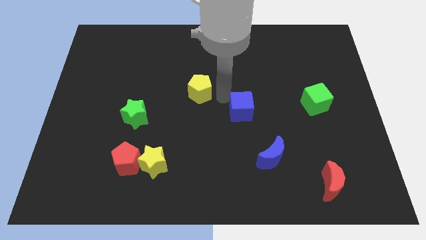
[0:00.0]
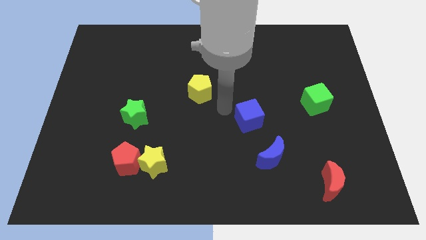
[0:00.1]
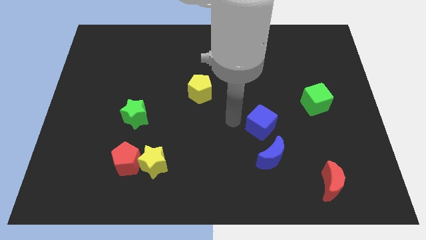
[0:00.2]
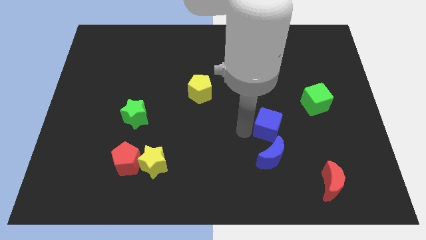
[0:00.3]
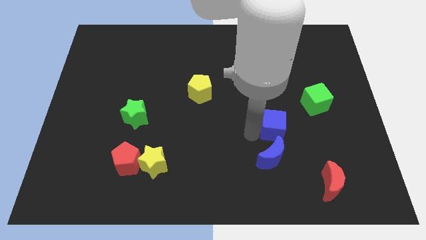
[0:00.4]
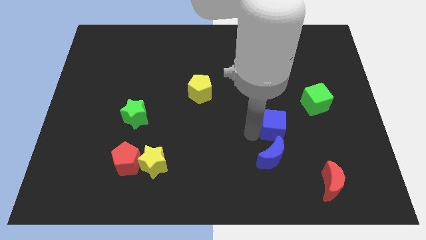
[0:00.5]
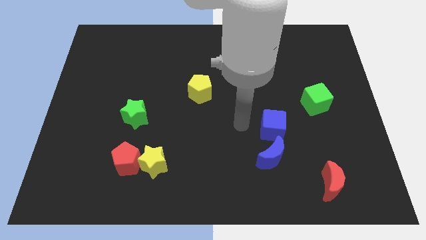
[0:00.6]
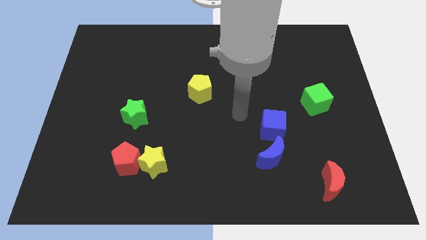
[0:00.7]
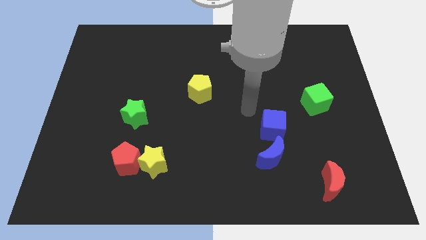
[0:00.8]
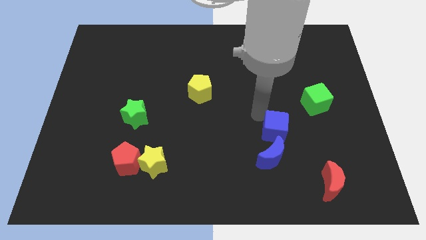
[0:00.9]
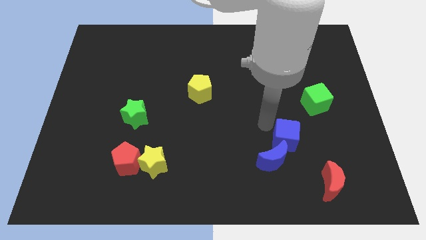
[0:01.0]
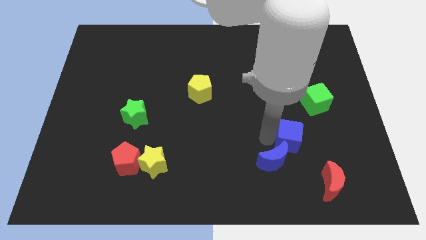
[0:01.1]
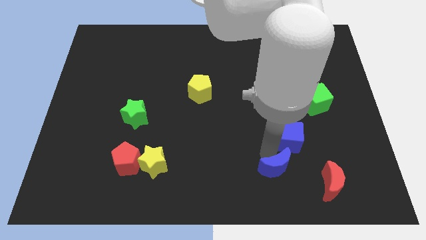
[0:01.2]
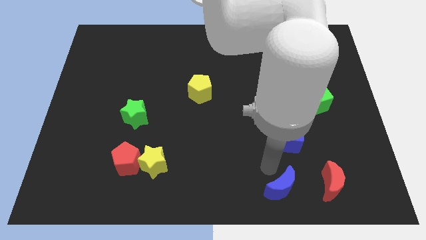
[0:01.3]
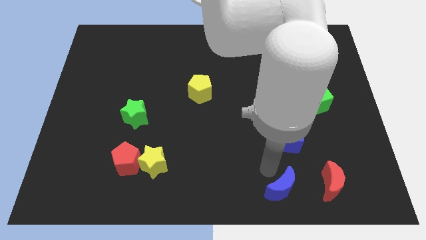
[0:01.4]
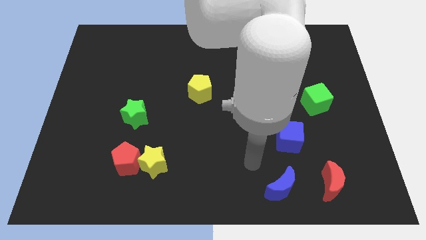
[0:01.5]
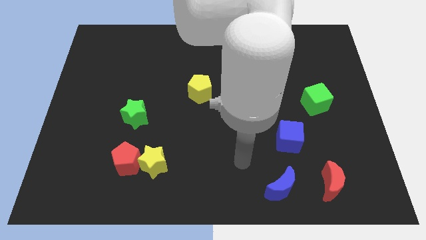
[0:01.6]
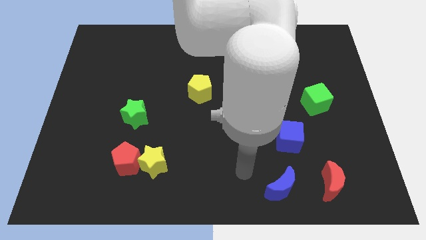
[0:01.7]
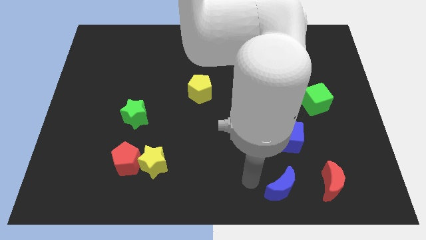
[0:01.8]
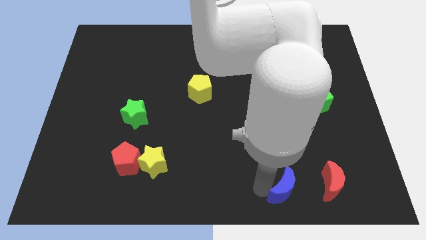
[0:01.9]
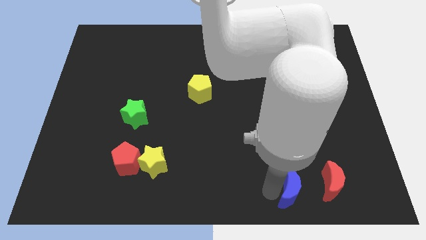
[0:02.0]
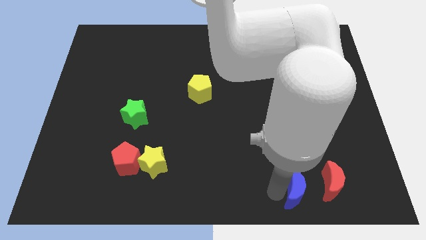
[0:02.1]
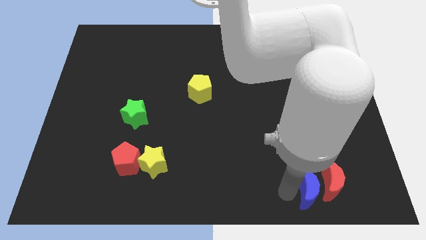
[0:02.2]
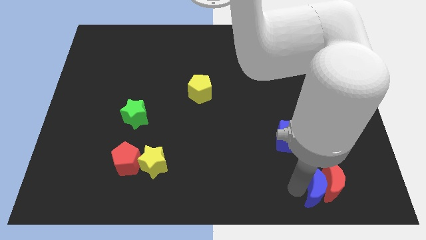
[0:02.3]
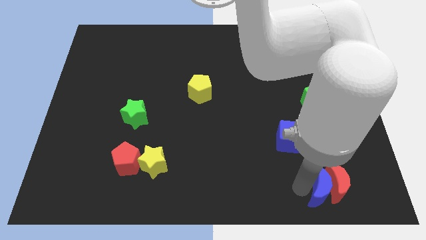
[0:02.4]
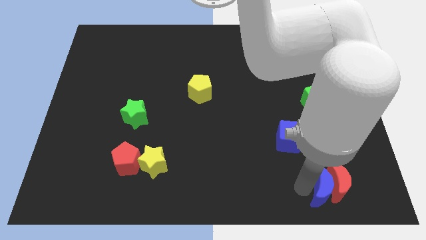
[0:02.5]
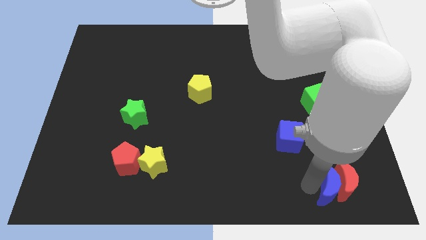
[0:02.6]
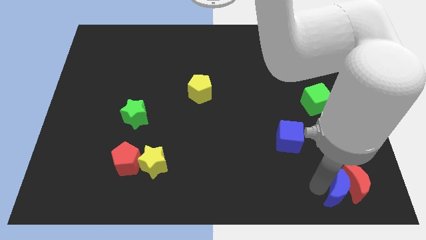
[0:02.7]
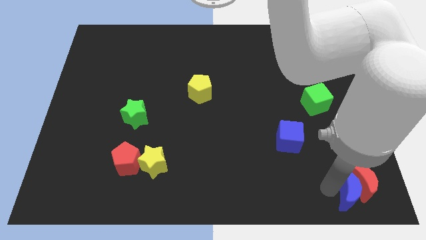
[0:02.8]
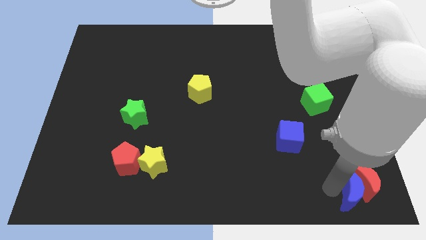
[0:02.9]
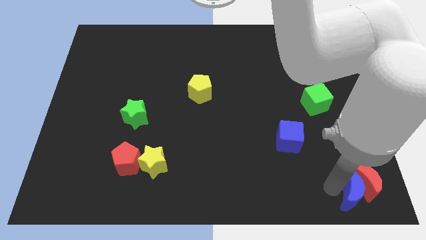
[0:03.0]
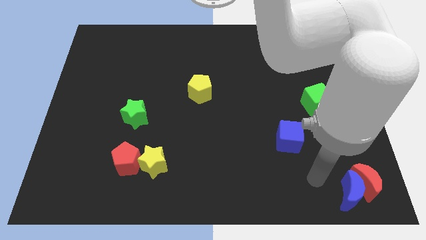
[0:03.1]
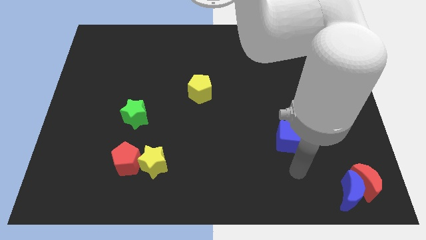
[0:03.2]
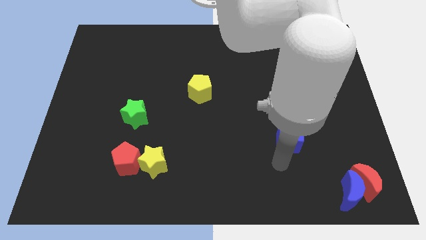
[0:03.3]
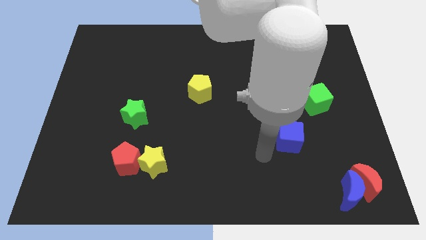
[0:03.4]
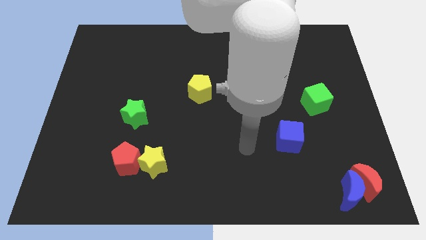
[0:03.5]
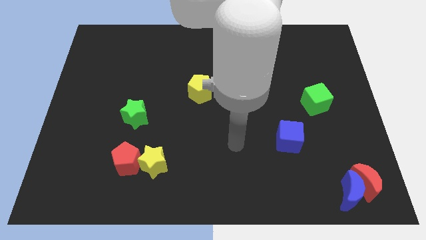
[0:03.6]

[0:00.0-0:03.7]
move the blue crescent into the red crescent

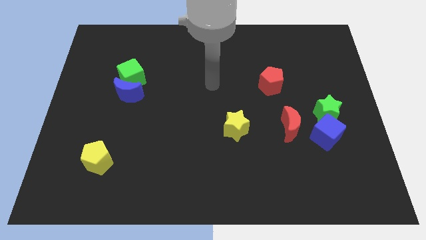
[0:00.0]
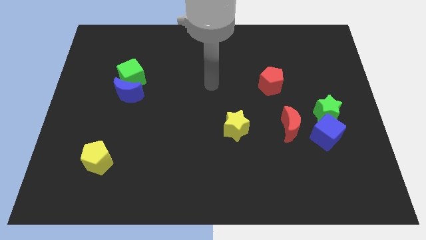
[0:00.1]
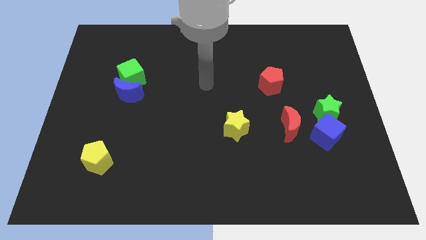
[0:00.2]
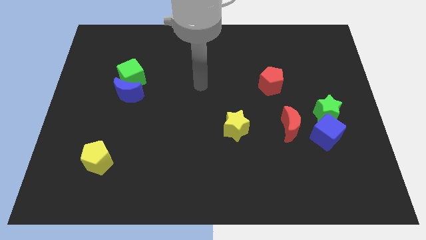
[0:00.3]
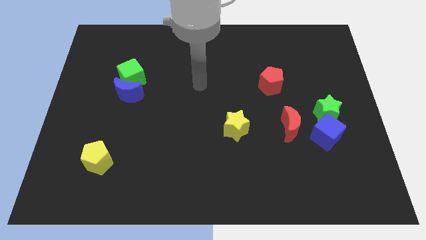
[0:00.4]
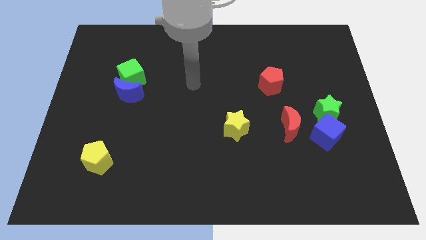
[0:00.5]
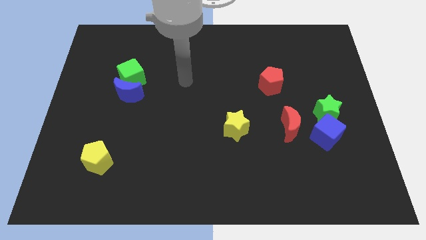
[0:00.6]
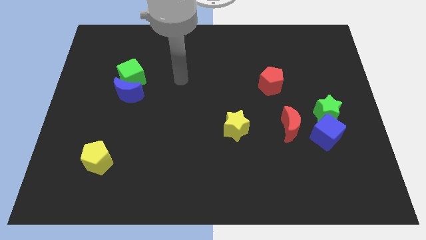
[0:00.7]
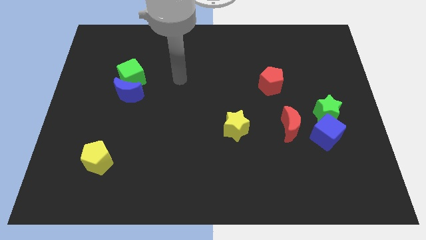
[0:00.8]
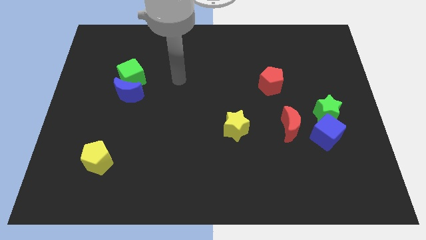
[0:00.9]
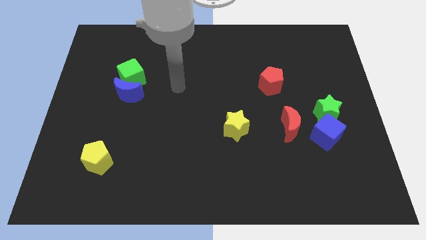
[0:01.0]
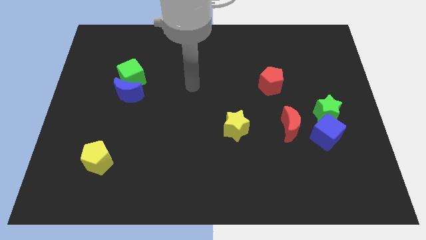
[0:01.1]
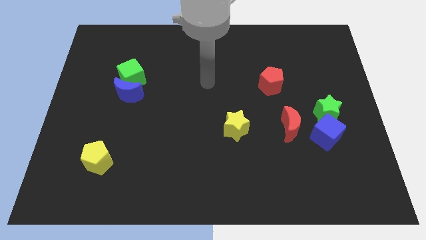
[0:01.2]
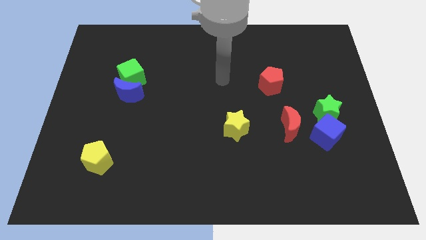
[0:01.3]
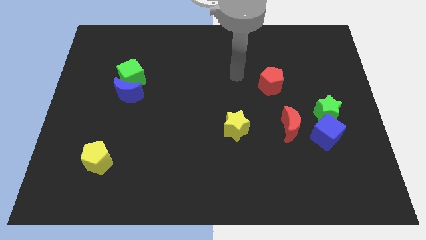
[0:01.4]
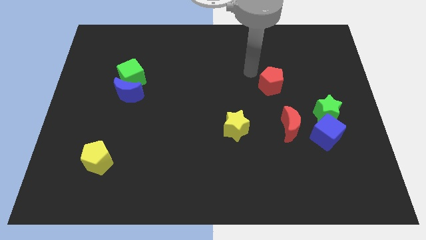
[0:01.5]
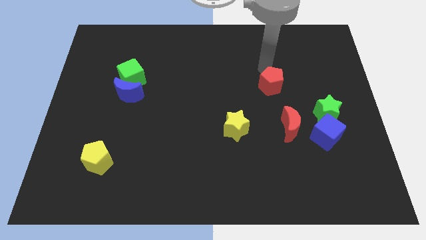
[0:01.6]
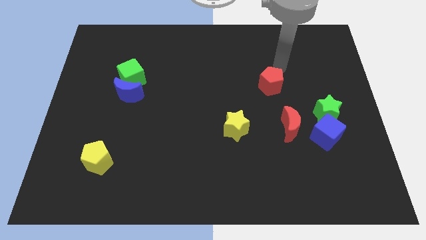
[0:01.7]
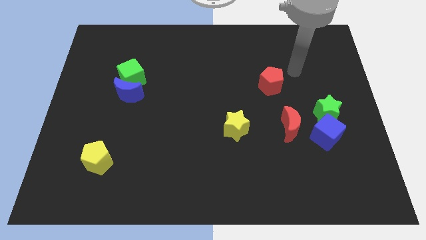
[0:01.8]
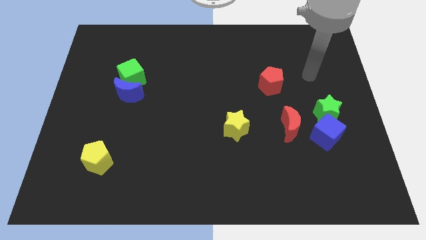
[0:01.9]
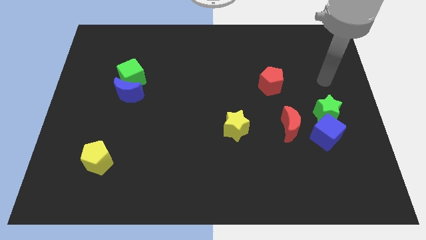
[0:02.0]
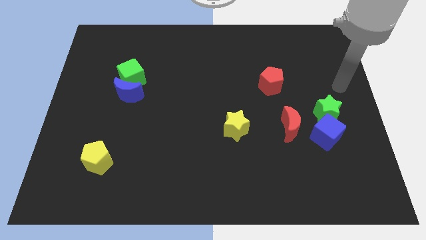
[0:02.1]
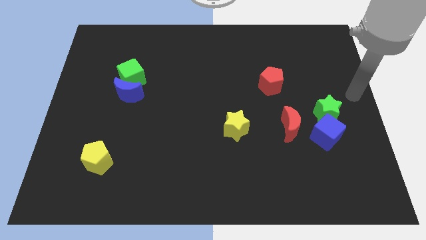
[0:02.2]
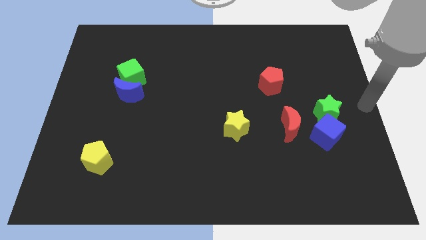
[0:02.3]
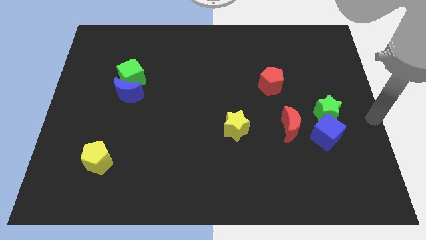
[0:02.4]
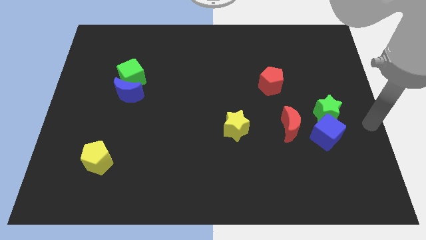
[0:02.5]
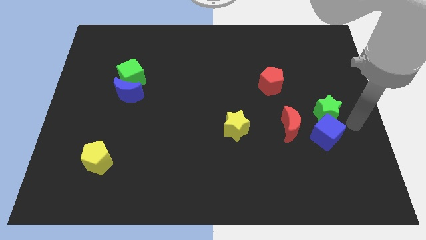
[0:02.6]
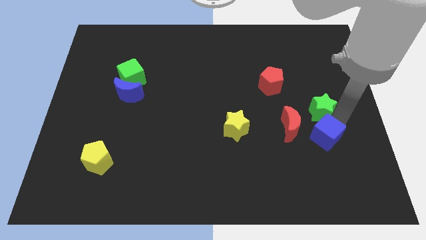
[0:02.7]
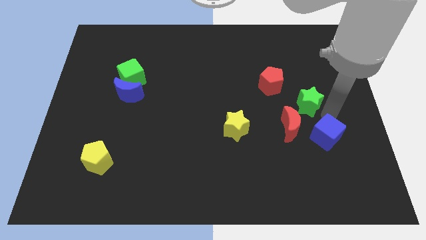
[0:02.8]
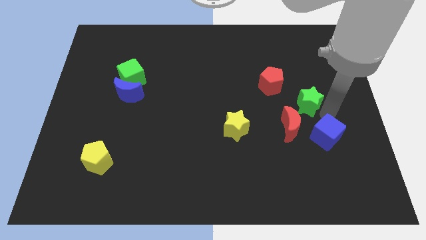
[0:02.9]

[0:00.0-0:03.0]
push the green star closer to the red pentagon

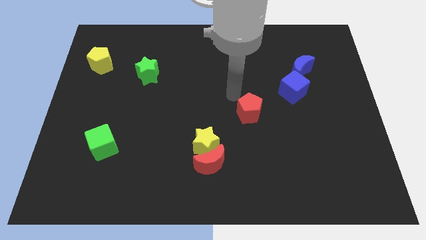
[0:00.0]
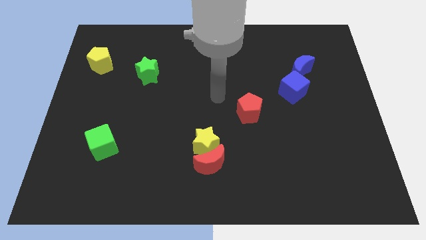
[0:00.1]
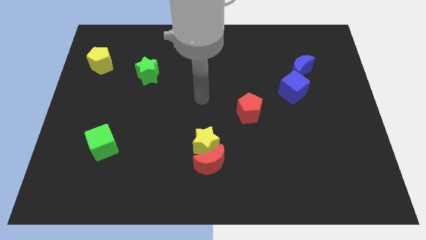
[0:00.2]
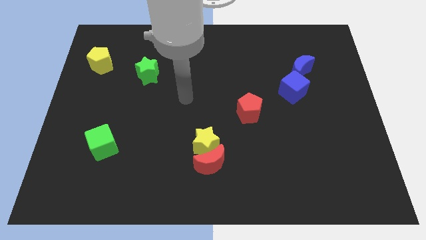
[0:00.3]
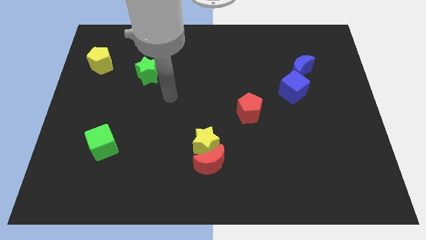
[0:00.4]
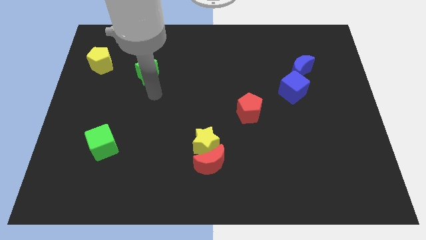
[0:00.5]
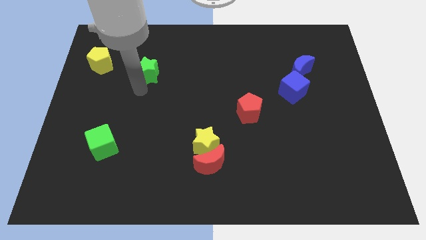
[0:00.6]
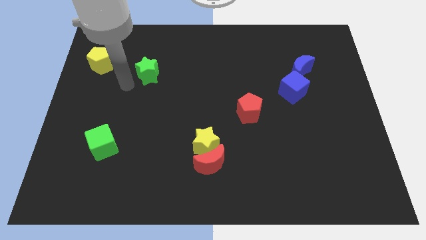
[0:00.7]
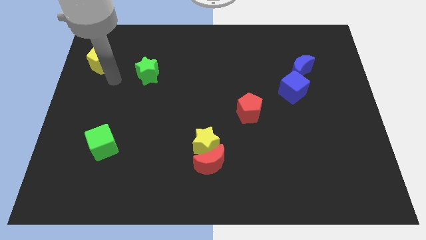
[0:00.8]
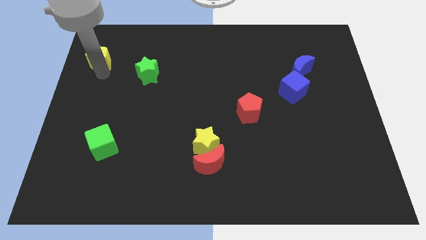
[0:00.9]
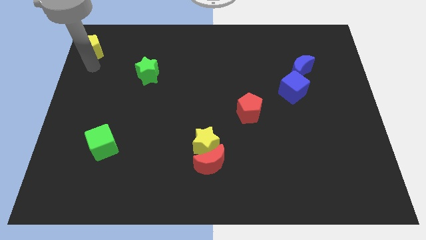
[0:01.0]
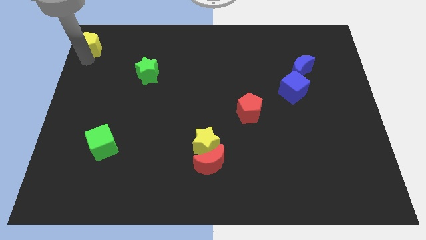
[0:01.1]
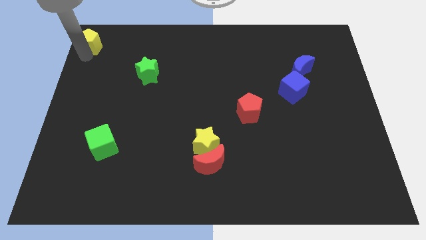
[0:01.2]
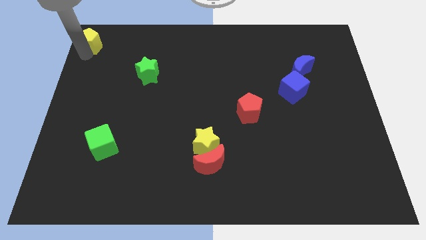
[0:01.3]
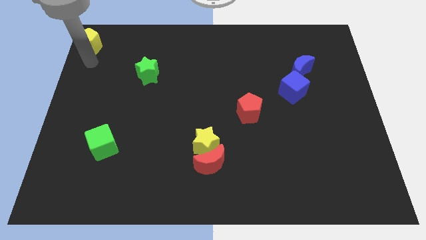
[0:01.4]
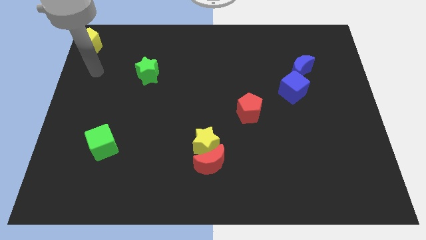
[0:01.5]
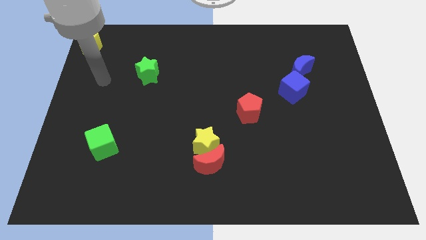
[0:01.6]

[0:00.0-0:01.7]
push the yellow pentagon towards the top left corner of the board

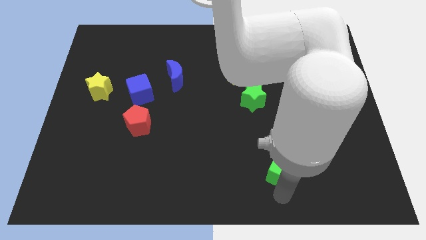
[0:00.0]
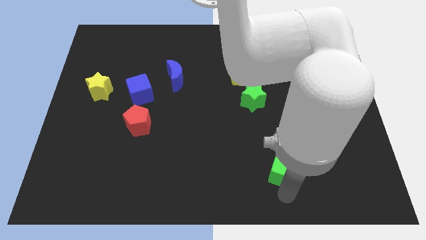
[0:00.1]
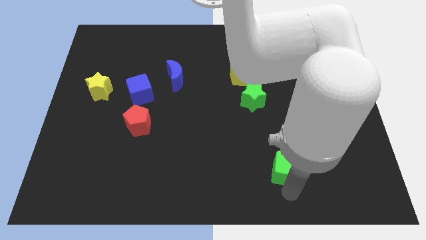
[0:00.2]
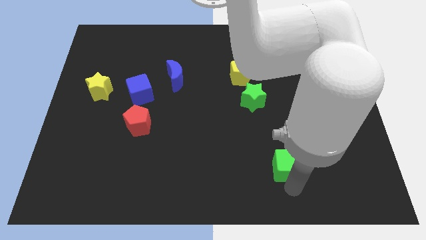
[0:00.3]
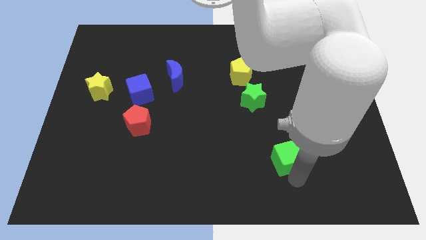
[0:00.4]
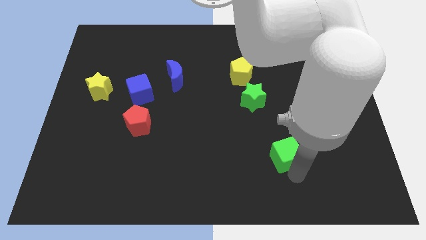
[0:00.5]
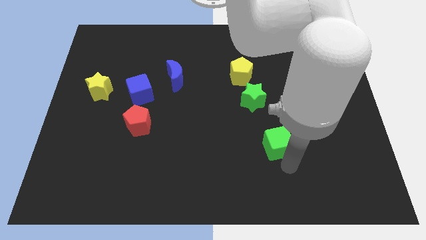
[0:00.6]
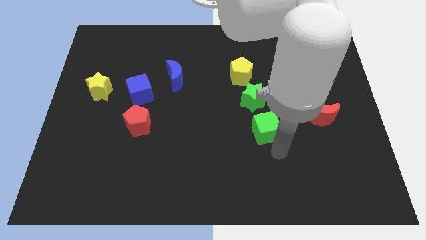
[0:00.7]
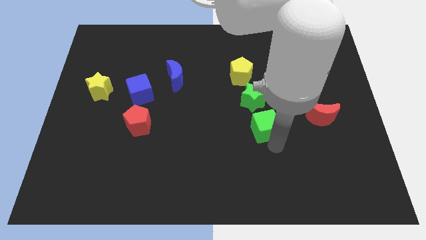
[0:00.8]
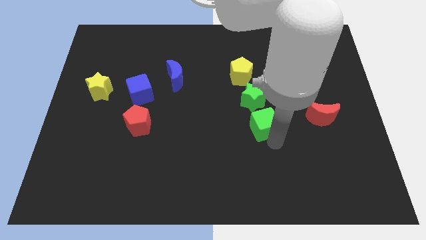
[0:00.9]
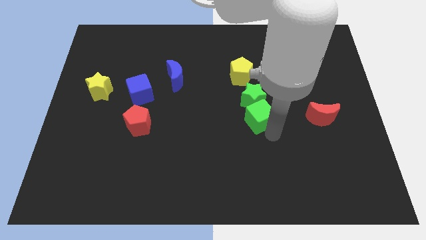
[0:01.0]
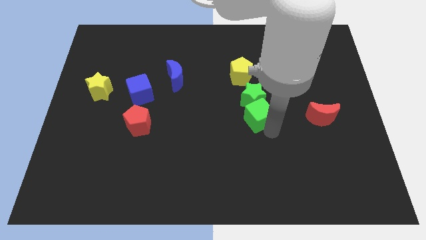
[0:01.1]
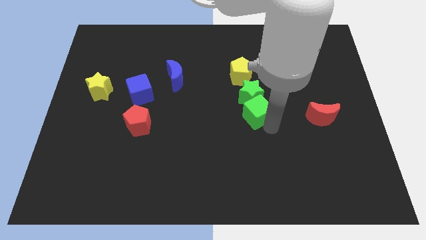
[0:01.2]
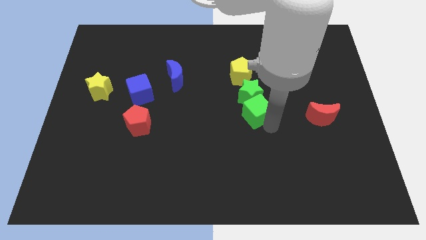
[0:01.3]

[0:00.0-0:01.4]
push the green cube into the green star
